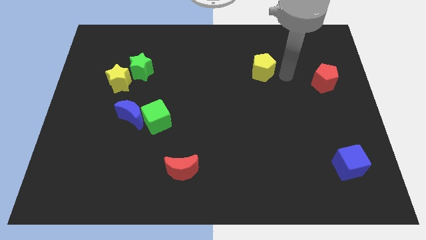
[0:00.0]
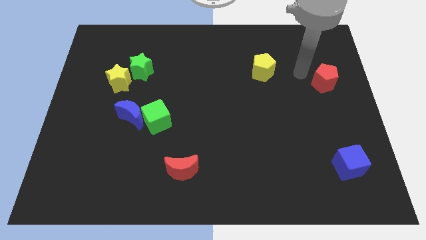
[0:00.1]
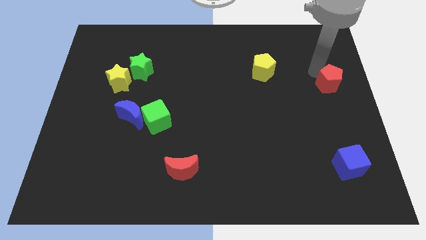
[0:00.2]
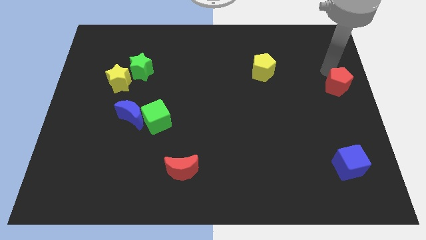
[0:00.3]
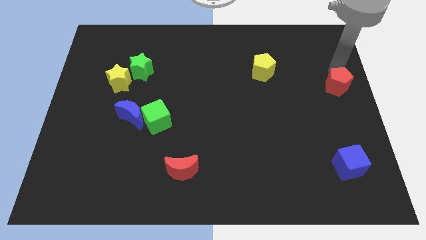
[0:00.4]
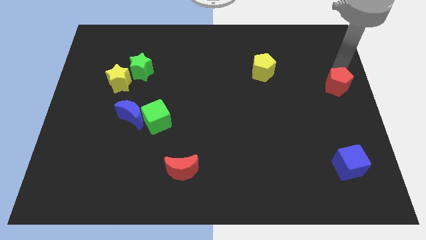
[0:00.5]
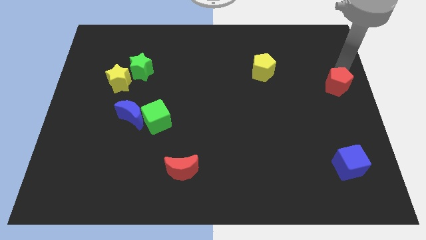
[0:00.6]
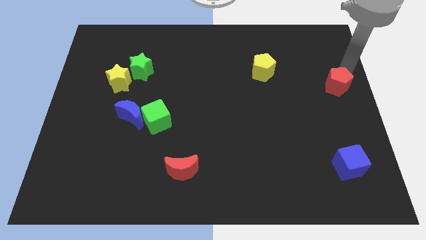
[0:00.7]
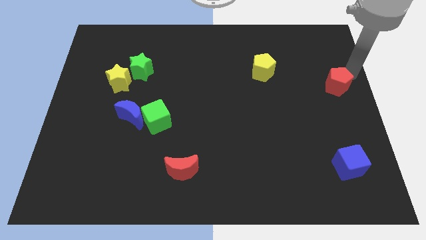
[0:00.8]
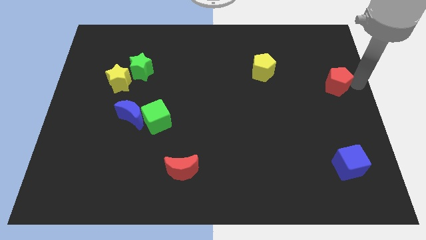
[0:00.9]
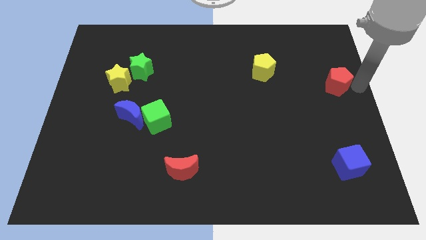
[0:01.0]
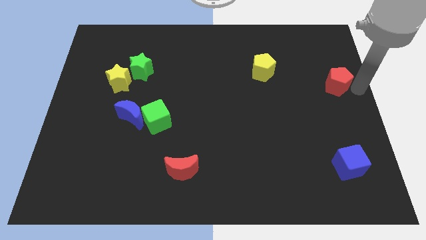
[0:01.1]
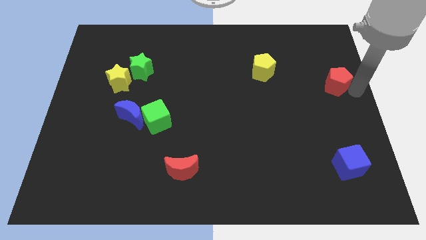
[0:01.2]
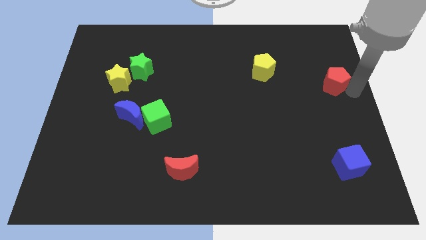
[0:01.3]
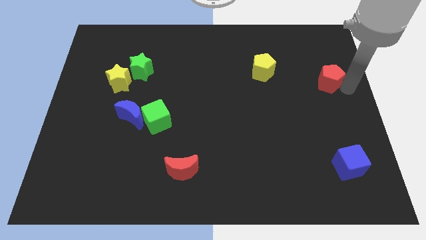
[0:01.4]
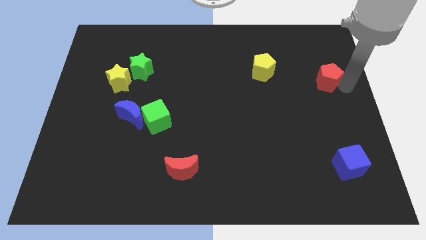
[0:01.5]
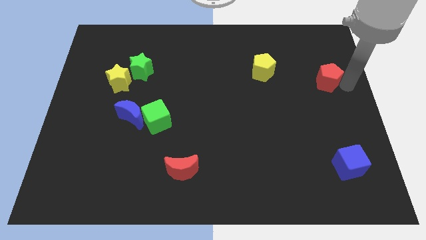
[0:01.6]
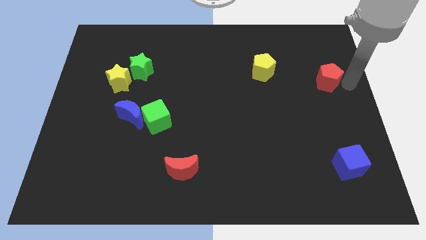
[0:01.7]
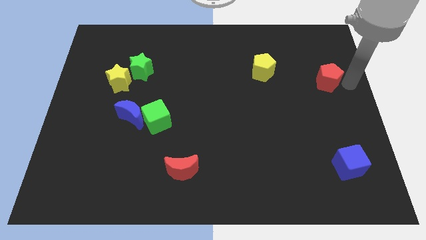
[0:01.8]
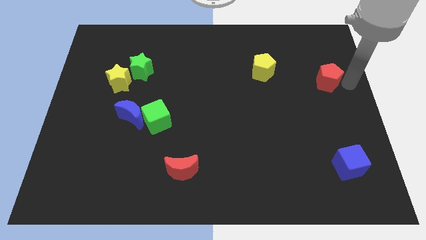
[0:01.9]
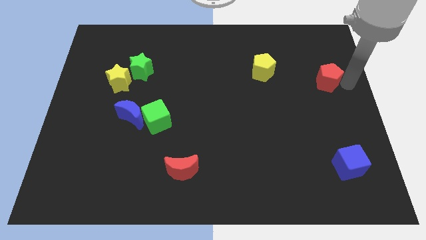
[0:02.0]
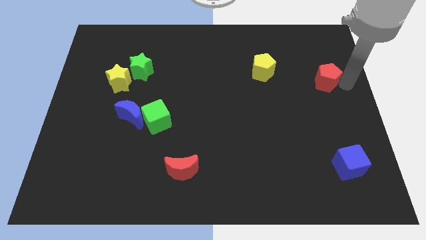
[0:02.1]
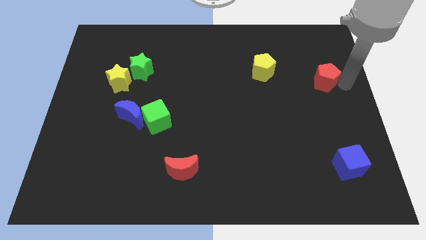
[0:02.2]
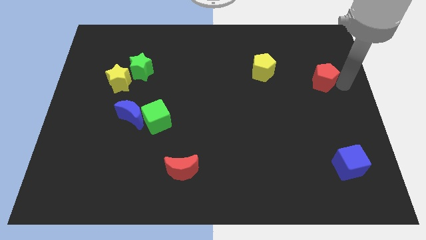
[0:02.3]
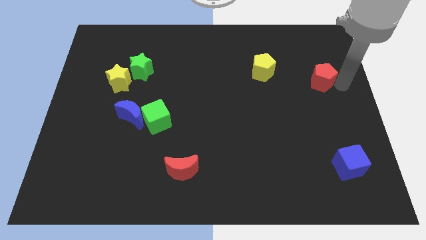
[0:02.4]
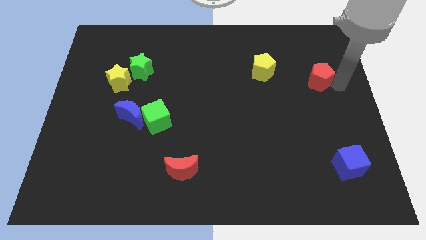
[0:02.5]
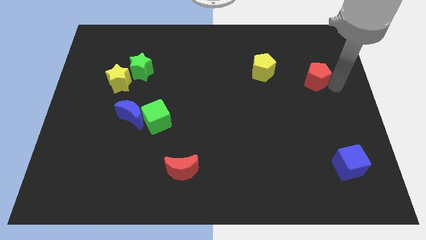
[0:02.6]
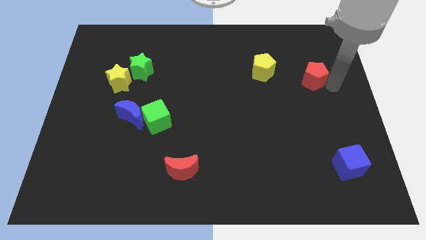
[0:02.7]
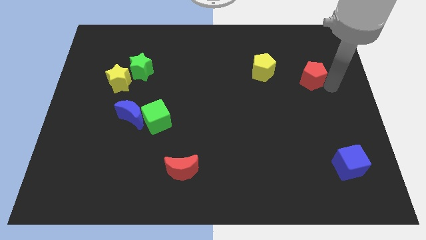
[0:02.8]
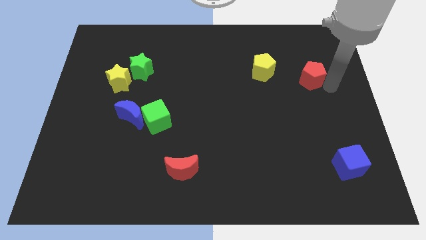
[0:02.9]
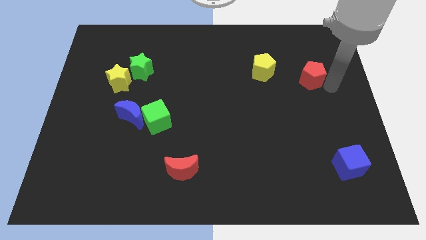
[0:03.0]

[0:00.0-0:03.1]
push the red pentagon towards the yellow pentagon

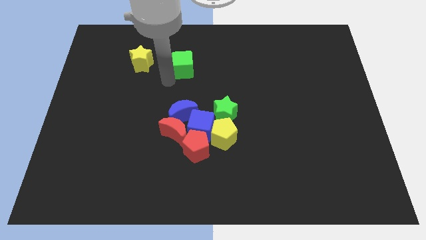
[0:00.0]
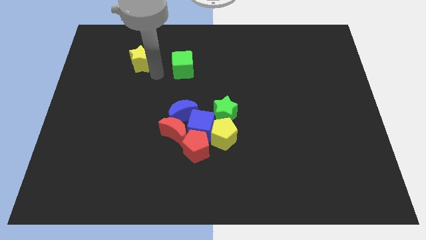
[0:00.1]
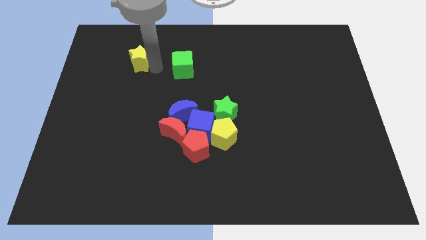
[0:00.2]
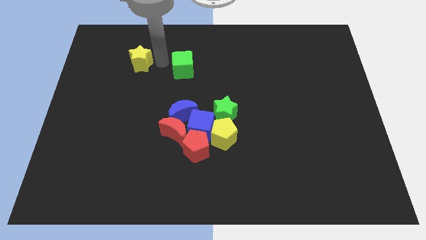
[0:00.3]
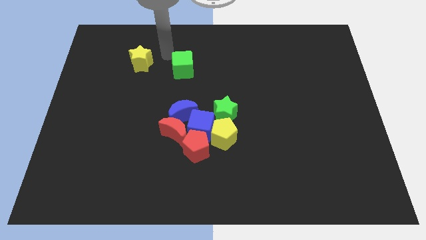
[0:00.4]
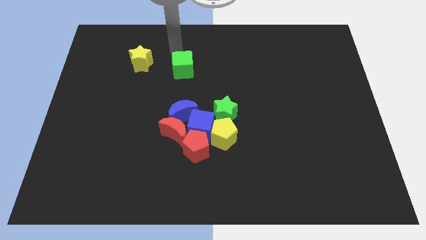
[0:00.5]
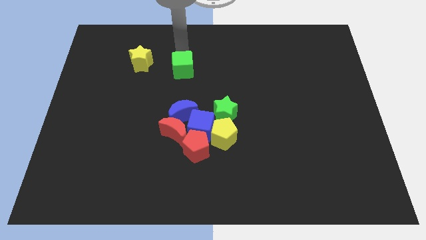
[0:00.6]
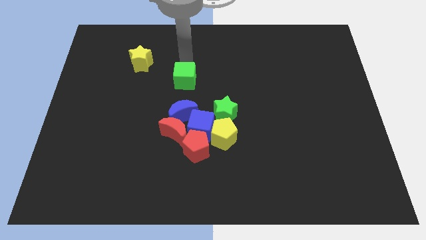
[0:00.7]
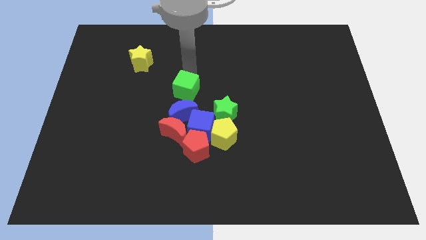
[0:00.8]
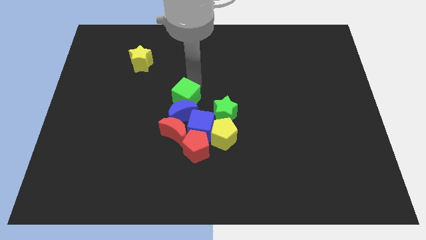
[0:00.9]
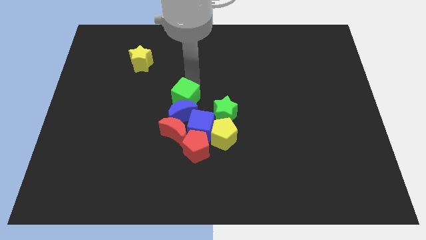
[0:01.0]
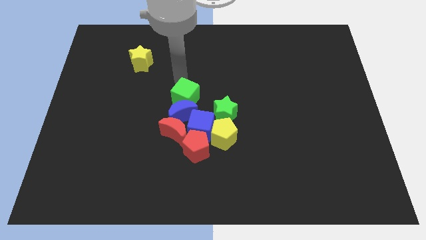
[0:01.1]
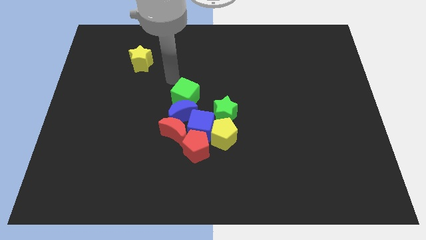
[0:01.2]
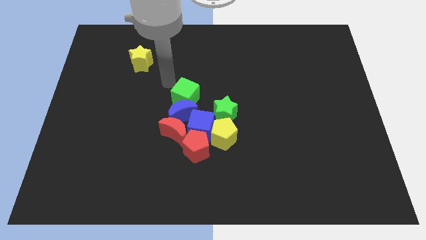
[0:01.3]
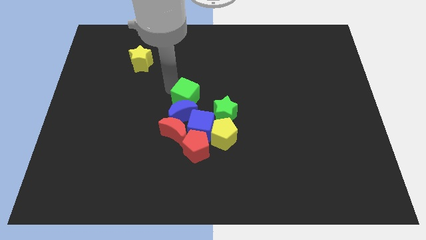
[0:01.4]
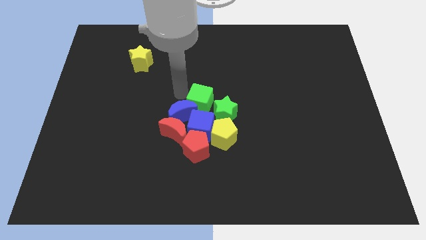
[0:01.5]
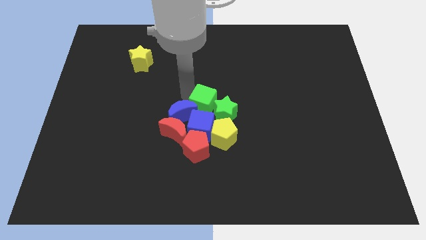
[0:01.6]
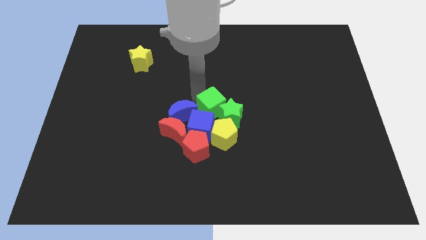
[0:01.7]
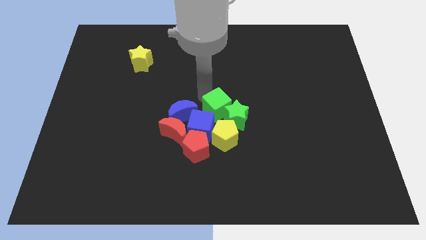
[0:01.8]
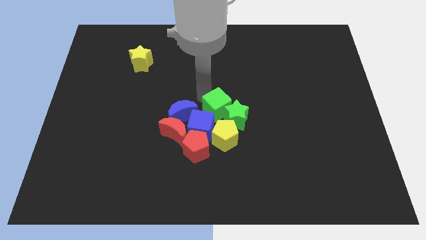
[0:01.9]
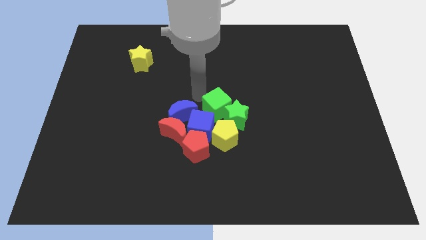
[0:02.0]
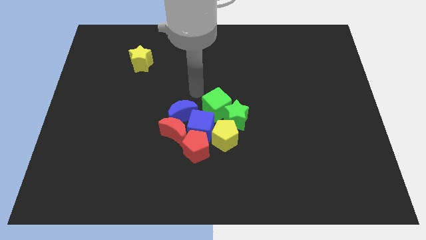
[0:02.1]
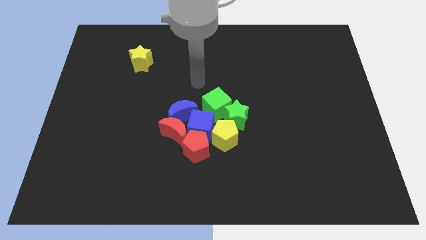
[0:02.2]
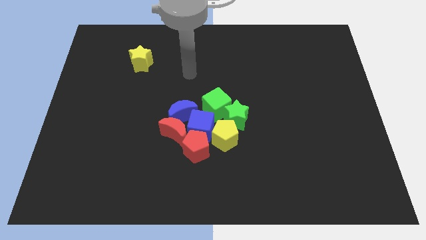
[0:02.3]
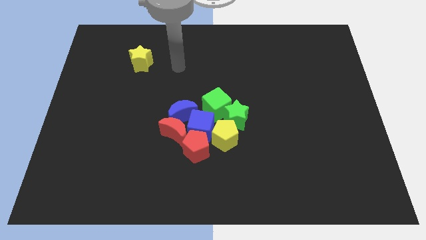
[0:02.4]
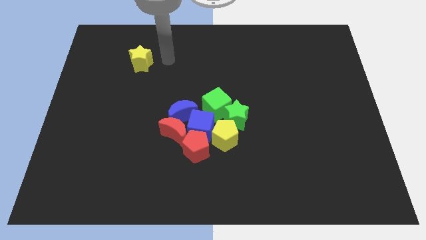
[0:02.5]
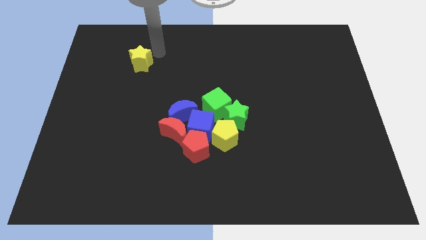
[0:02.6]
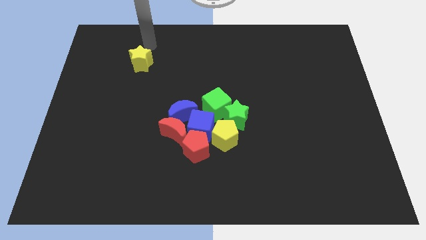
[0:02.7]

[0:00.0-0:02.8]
push the green cube into the green star

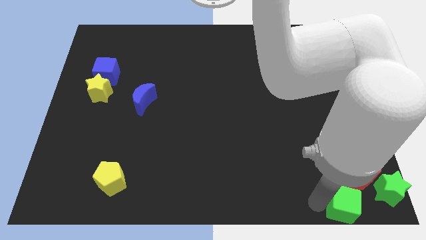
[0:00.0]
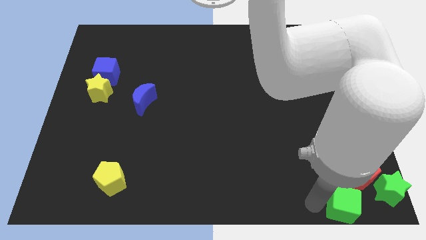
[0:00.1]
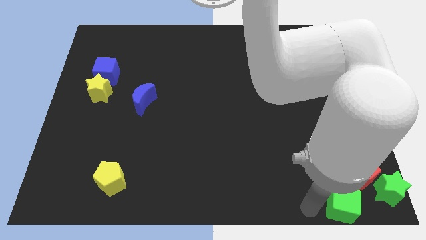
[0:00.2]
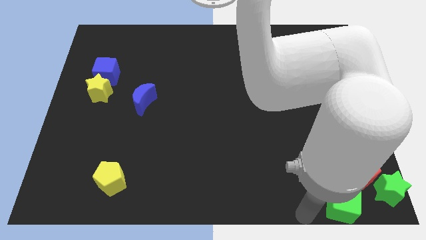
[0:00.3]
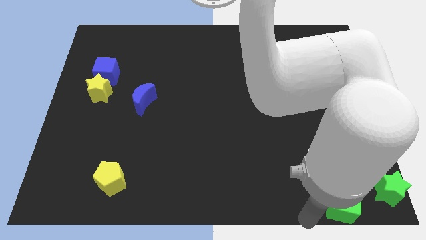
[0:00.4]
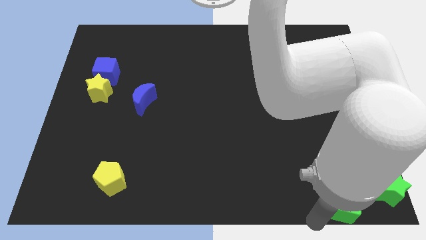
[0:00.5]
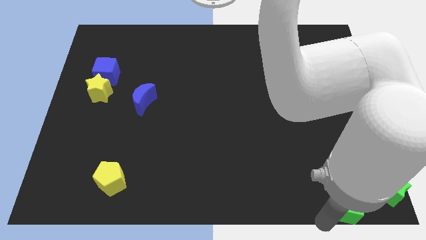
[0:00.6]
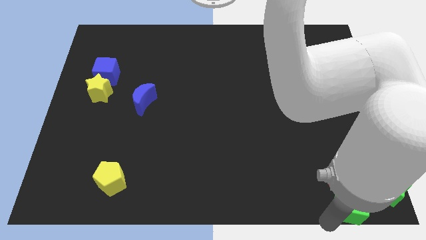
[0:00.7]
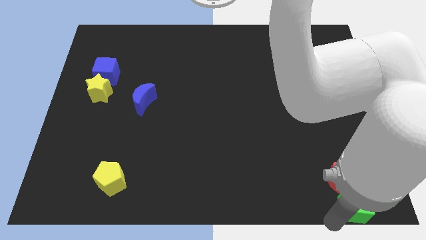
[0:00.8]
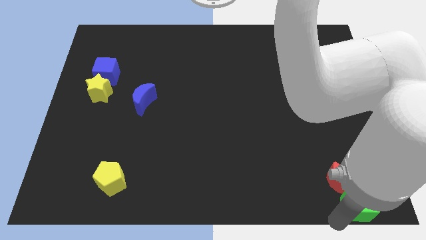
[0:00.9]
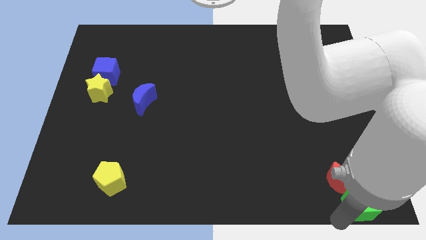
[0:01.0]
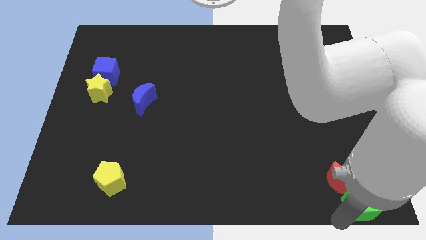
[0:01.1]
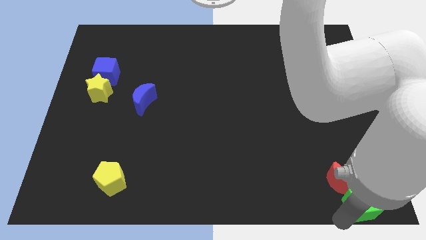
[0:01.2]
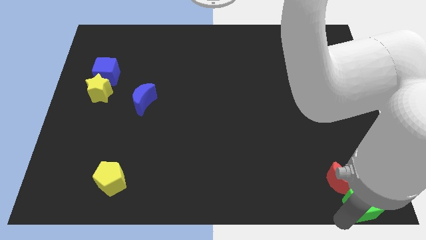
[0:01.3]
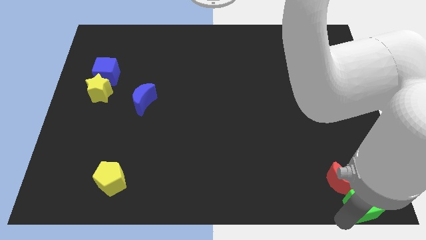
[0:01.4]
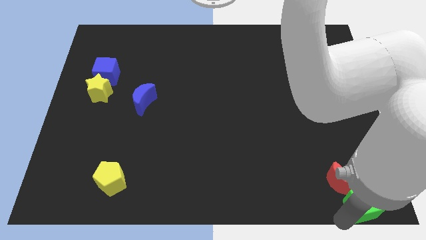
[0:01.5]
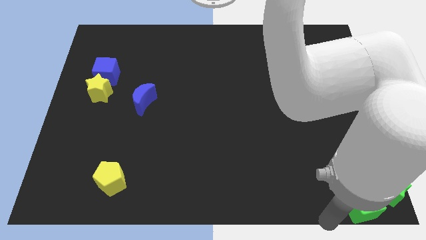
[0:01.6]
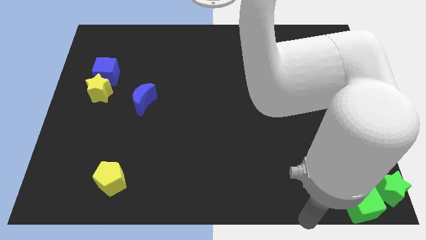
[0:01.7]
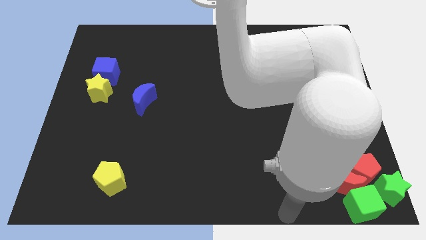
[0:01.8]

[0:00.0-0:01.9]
add the green cube to the group of blocks at the bottom right corner of the board

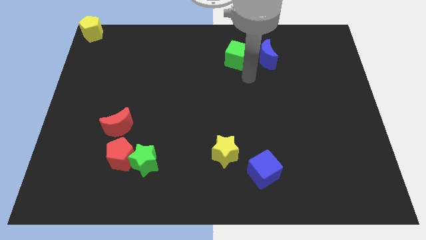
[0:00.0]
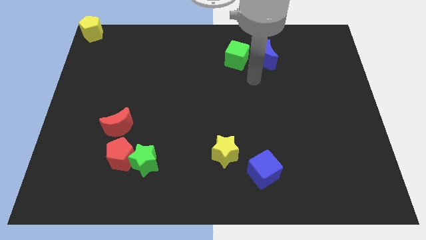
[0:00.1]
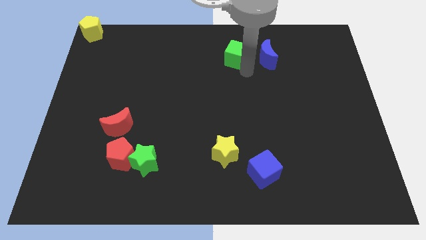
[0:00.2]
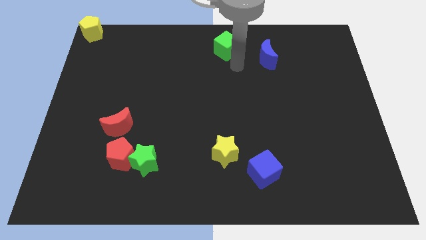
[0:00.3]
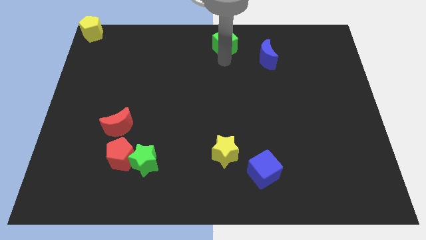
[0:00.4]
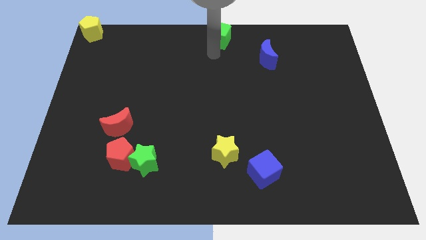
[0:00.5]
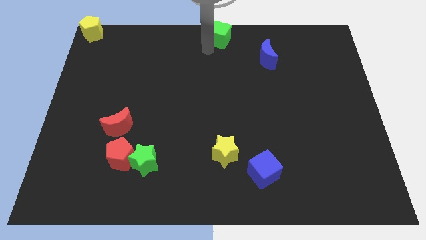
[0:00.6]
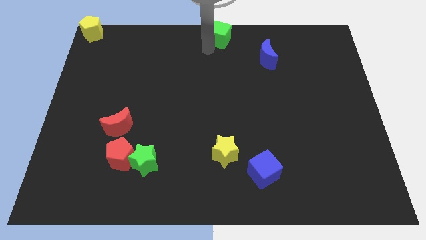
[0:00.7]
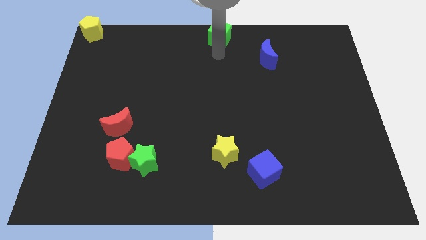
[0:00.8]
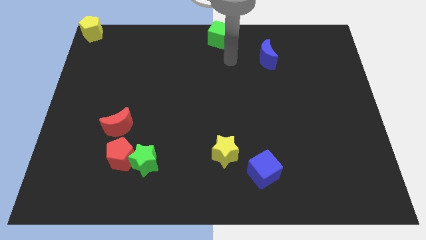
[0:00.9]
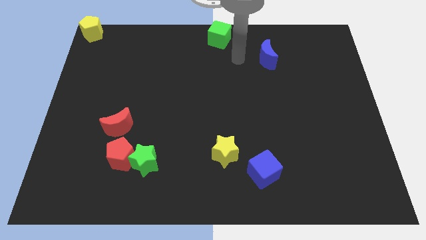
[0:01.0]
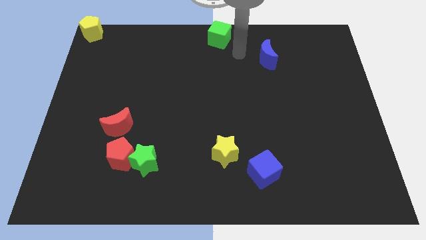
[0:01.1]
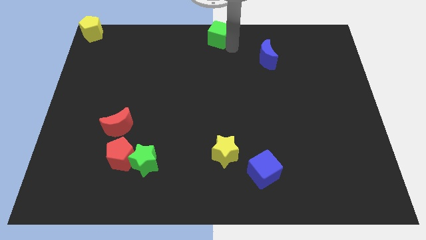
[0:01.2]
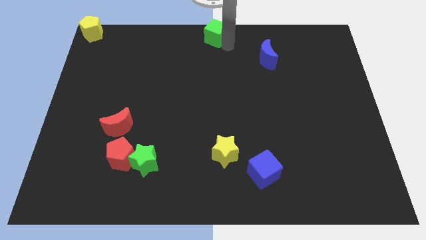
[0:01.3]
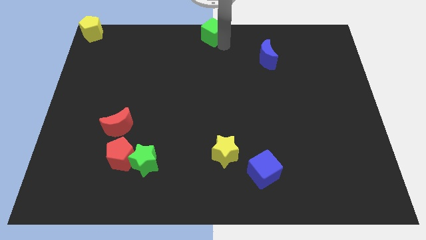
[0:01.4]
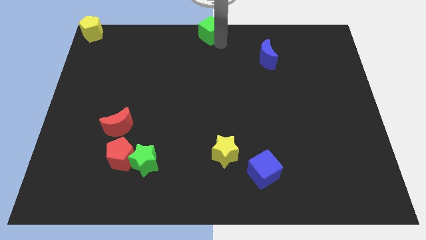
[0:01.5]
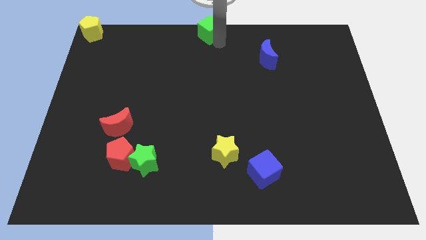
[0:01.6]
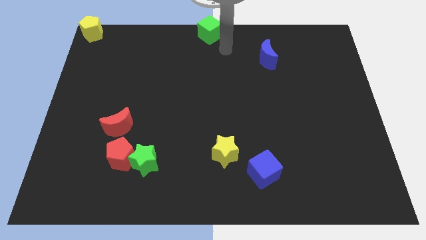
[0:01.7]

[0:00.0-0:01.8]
push the green cube to the top center
